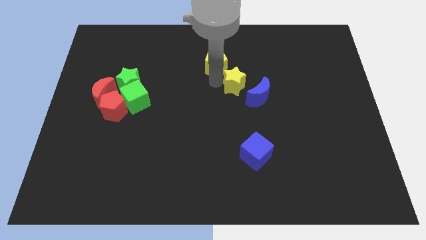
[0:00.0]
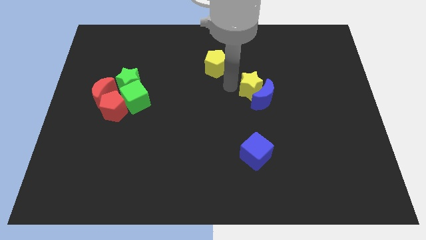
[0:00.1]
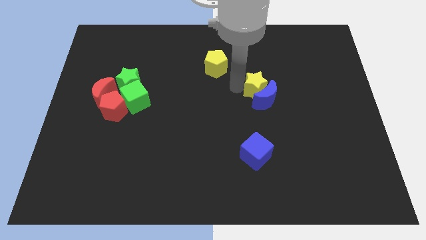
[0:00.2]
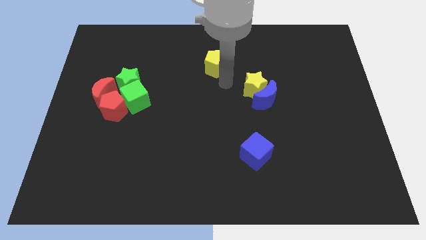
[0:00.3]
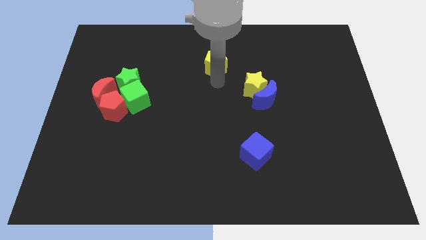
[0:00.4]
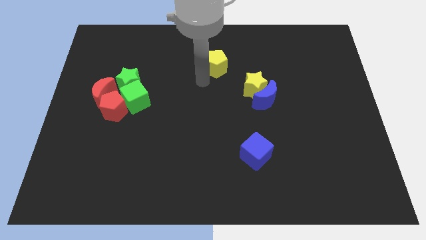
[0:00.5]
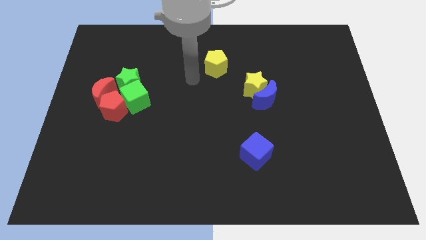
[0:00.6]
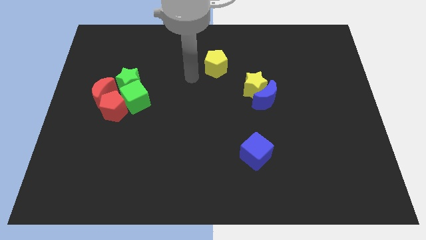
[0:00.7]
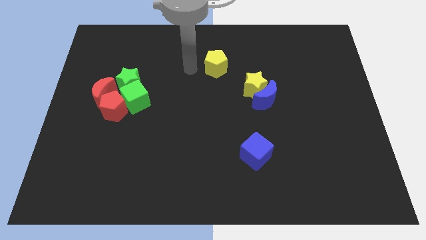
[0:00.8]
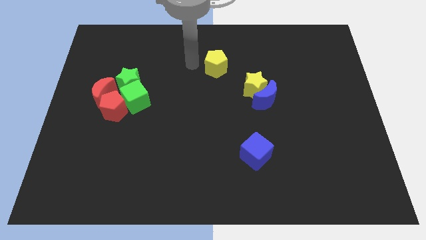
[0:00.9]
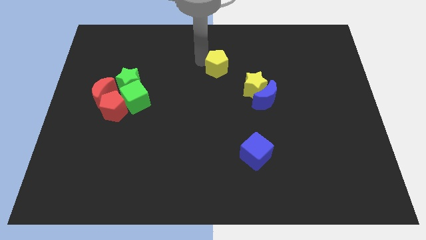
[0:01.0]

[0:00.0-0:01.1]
move the yellow star into the blue crescent

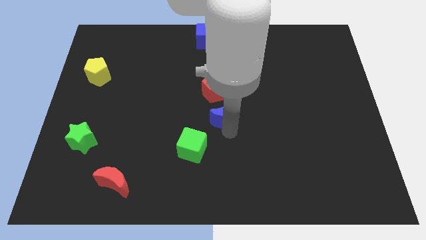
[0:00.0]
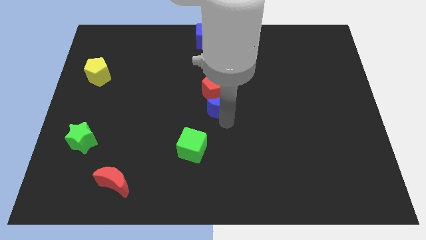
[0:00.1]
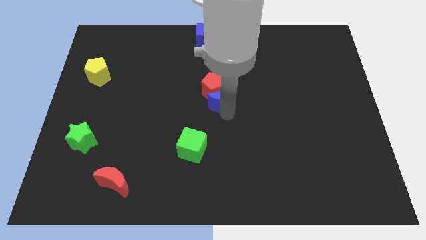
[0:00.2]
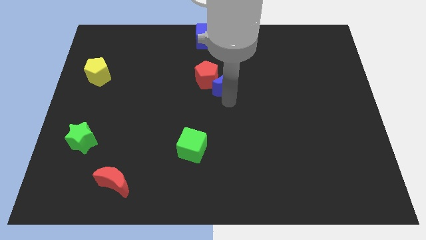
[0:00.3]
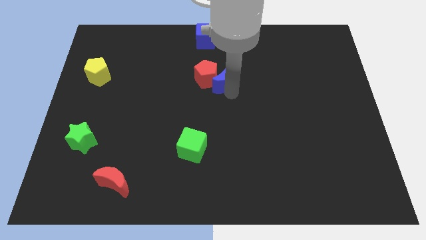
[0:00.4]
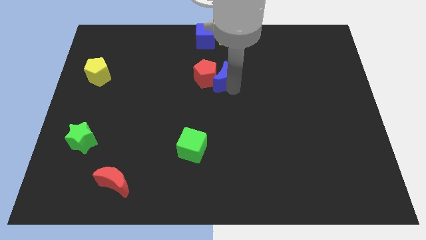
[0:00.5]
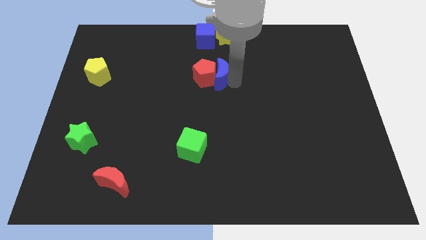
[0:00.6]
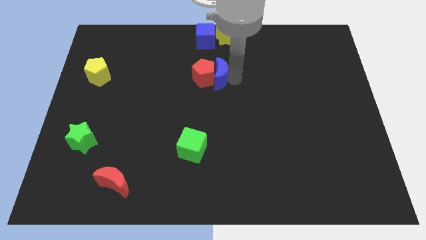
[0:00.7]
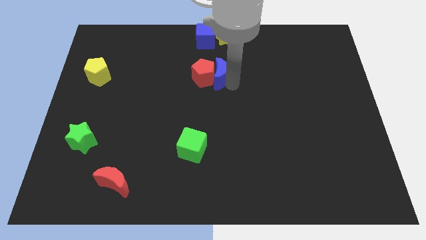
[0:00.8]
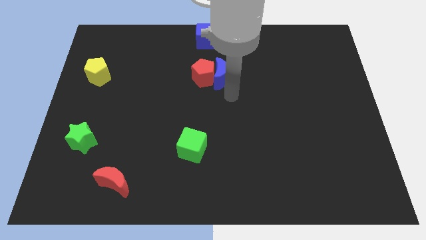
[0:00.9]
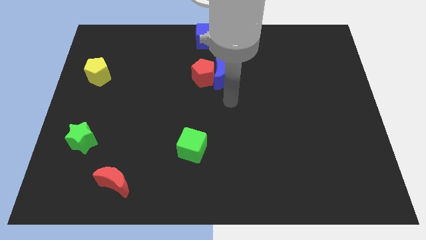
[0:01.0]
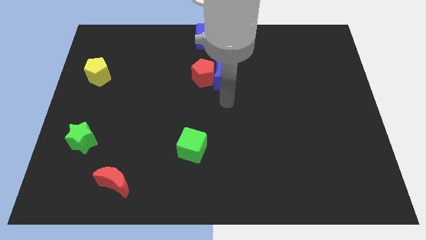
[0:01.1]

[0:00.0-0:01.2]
slide the blue moon to the right side of the red pentagon

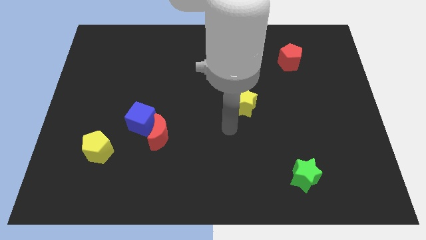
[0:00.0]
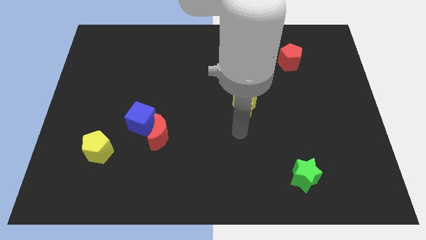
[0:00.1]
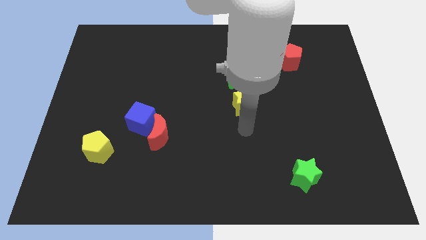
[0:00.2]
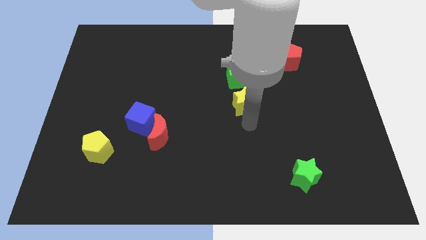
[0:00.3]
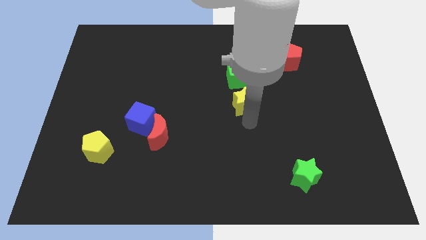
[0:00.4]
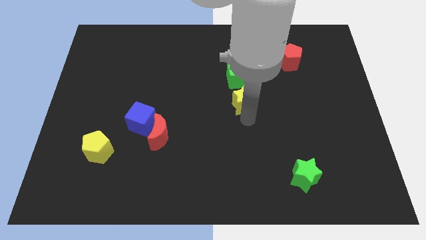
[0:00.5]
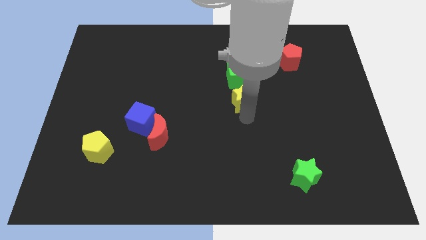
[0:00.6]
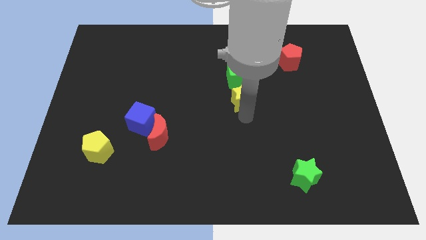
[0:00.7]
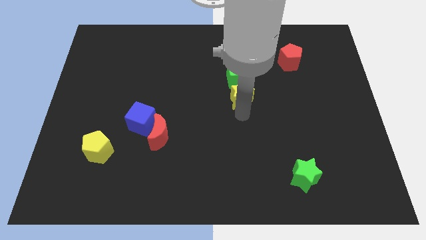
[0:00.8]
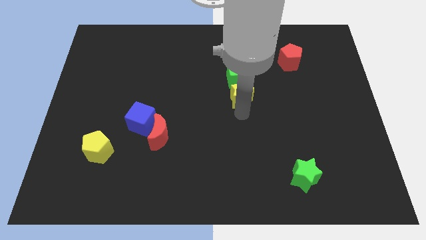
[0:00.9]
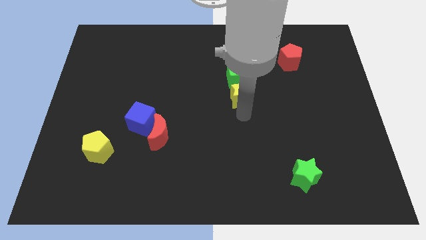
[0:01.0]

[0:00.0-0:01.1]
move yellow star at the bottom of green cube

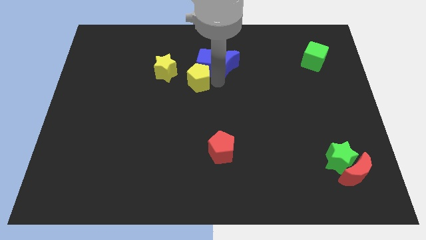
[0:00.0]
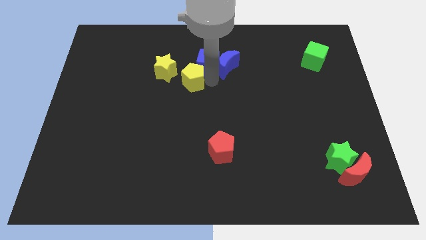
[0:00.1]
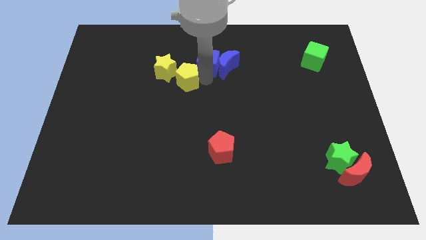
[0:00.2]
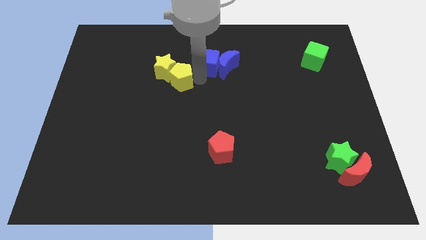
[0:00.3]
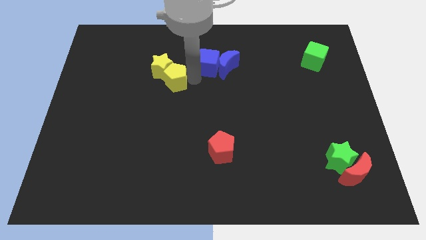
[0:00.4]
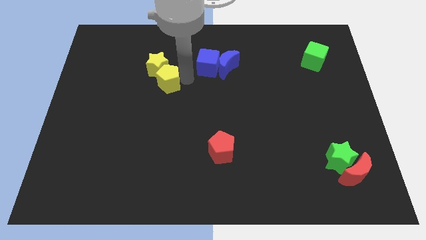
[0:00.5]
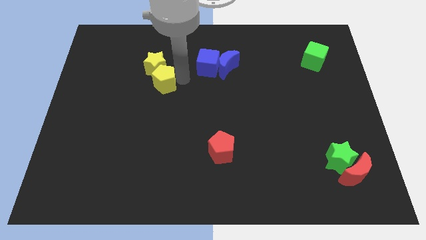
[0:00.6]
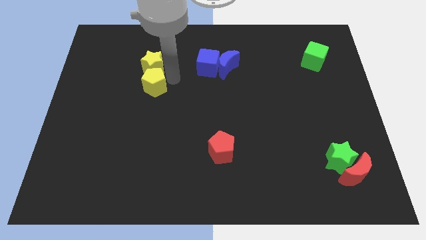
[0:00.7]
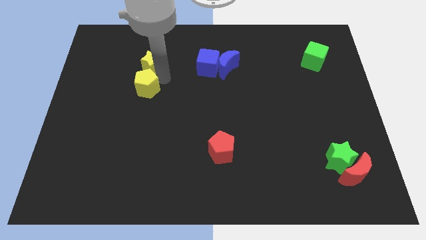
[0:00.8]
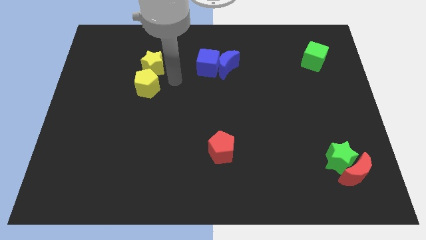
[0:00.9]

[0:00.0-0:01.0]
move the yellow pentagon to the bottom of the yellow star

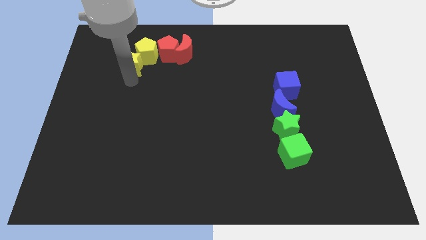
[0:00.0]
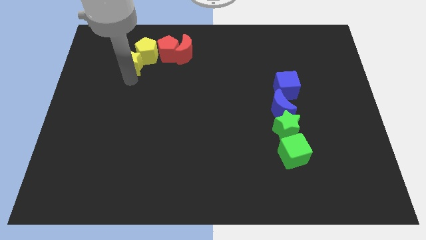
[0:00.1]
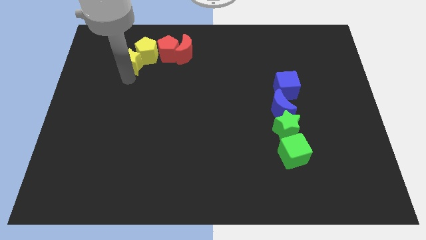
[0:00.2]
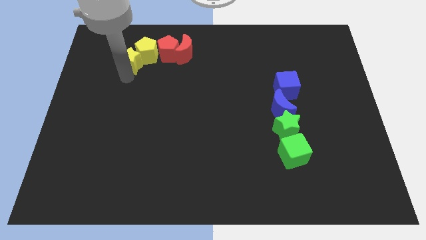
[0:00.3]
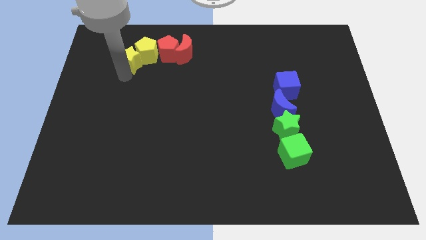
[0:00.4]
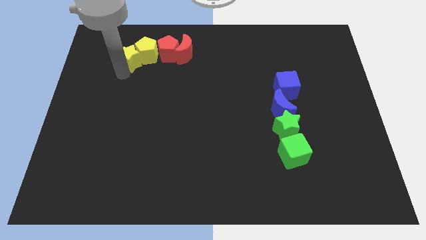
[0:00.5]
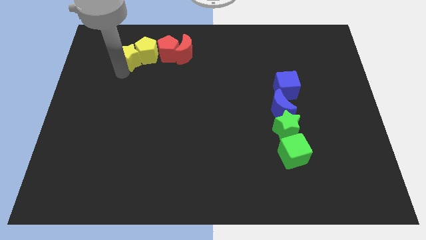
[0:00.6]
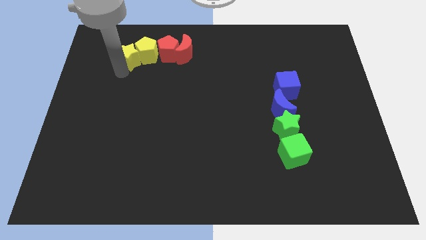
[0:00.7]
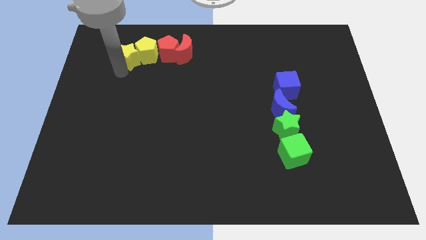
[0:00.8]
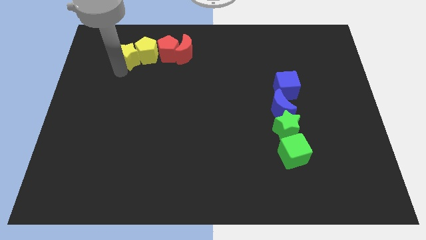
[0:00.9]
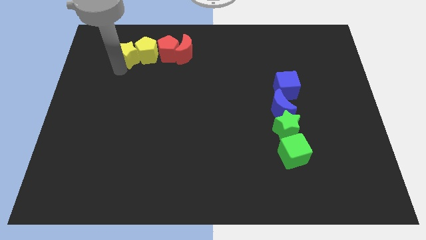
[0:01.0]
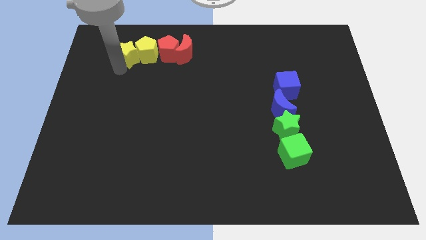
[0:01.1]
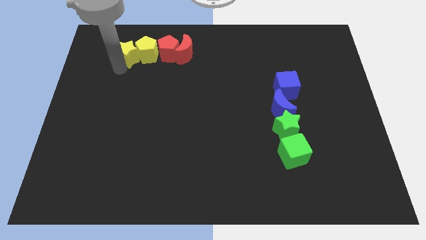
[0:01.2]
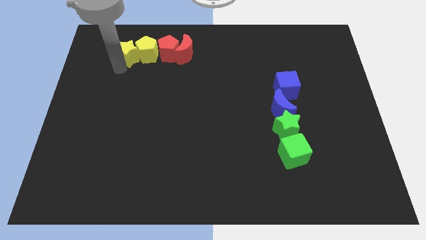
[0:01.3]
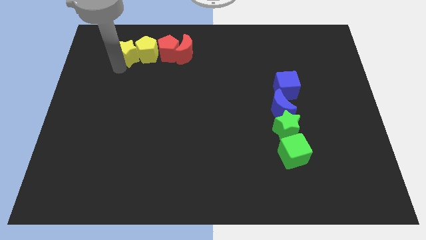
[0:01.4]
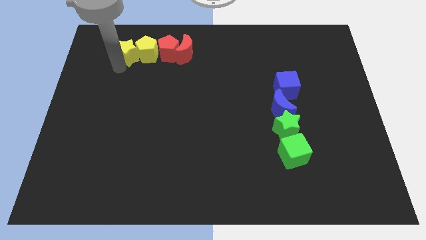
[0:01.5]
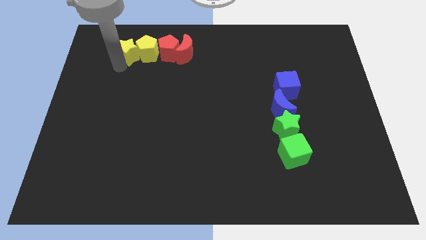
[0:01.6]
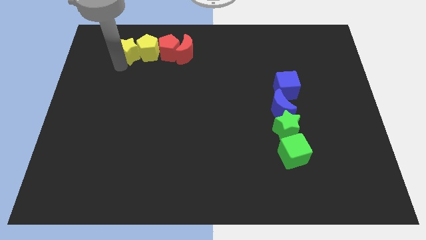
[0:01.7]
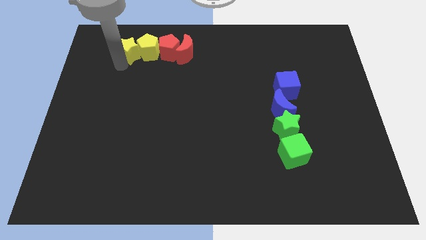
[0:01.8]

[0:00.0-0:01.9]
push the yellow star to the left of the yellow pentagon

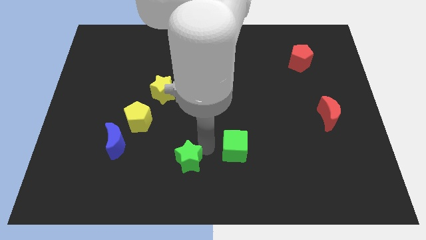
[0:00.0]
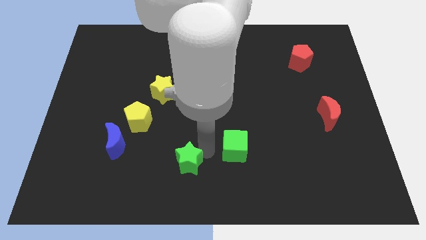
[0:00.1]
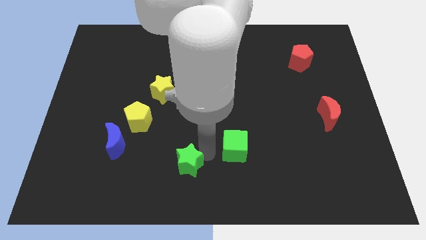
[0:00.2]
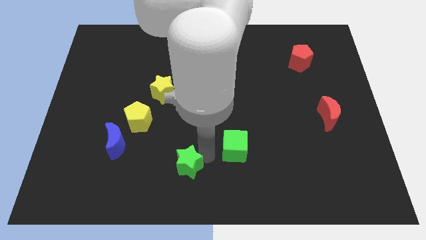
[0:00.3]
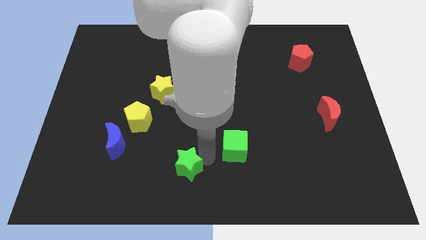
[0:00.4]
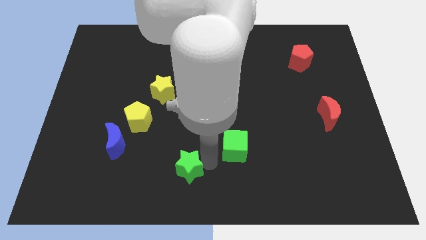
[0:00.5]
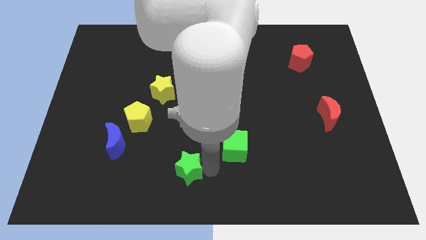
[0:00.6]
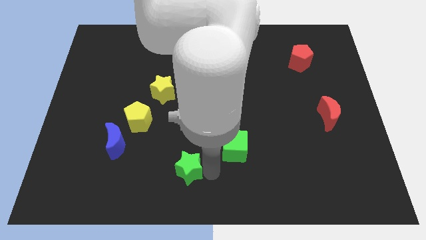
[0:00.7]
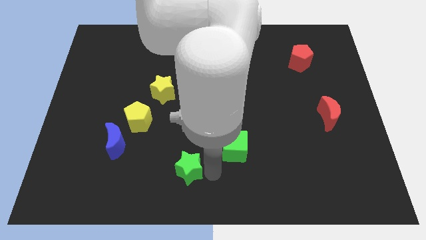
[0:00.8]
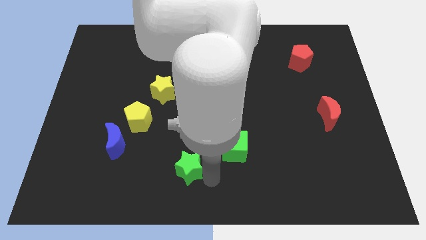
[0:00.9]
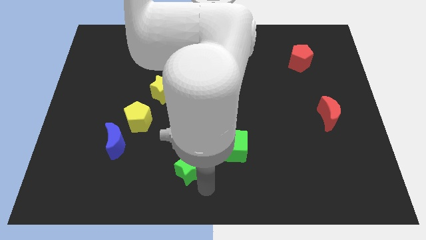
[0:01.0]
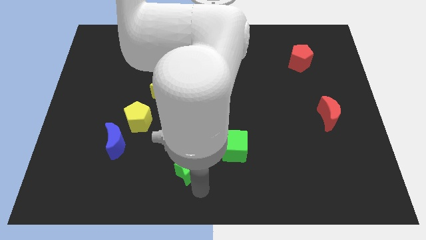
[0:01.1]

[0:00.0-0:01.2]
turn the green star slightly

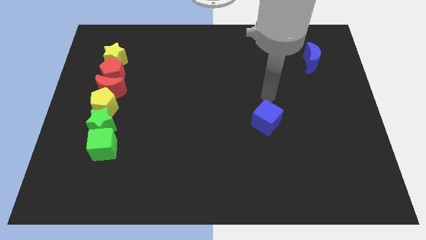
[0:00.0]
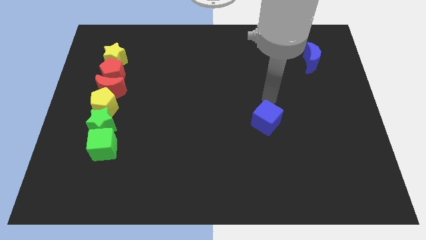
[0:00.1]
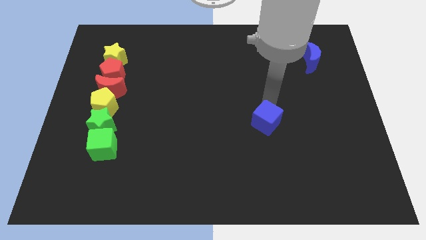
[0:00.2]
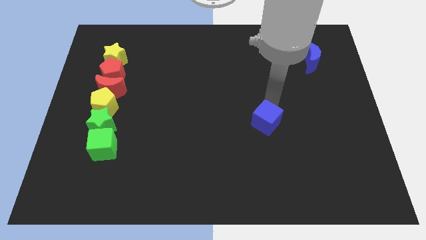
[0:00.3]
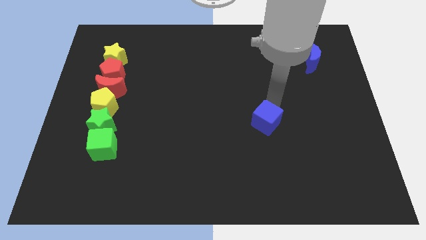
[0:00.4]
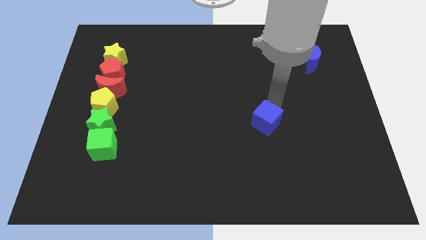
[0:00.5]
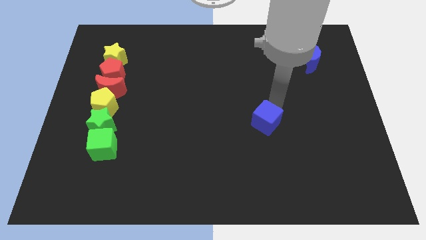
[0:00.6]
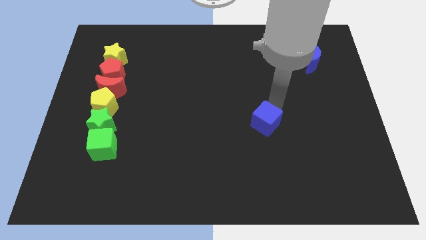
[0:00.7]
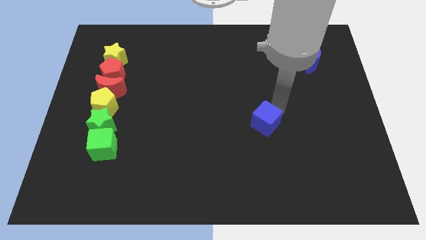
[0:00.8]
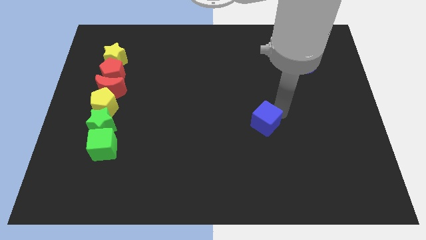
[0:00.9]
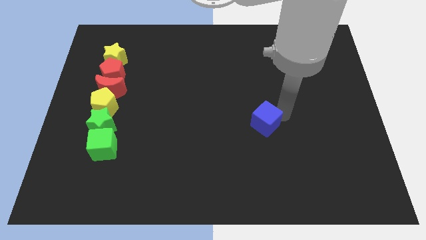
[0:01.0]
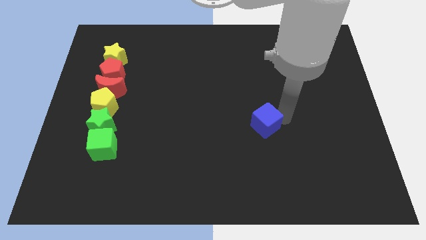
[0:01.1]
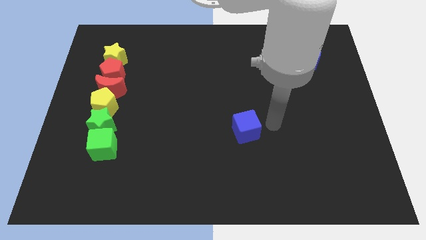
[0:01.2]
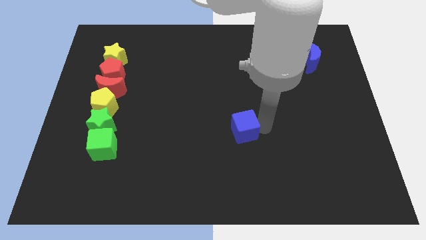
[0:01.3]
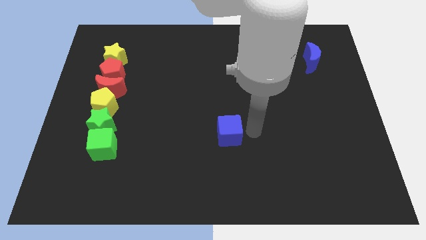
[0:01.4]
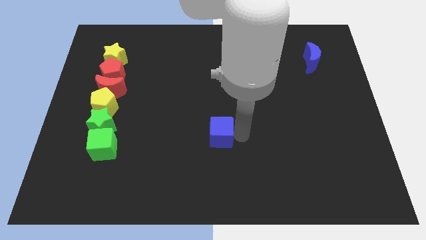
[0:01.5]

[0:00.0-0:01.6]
place blue cube to the center of the board
